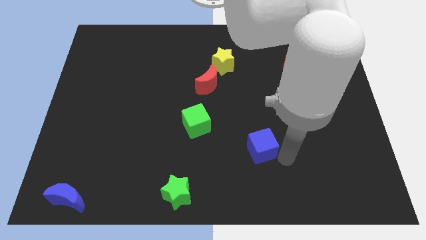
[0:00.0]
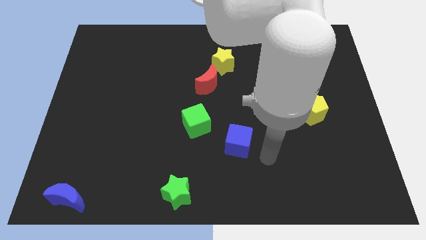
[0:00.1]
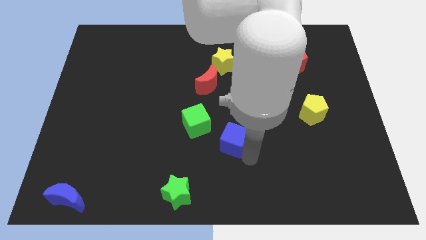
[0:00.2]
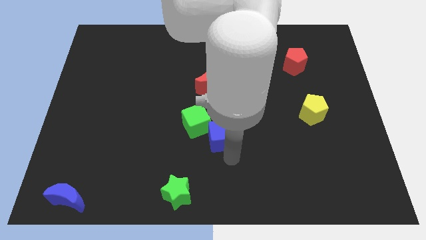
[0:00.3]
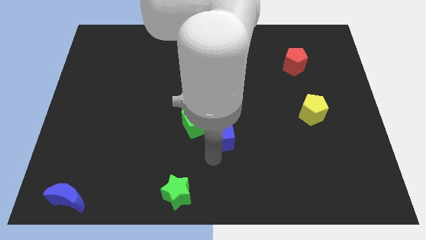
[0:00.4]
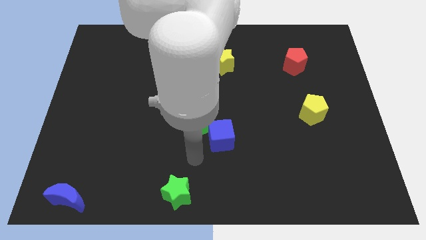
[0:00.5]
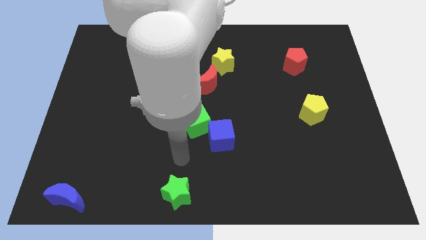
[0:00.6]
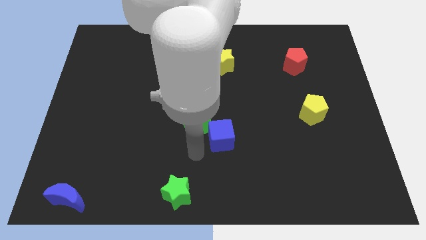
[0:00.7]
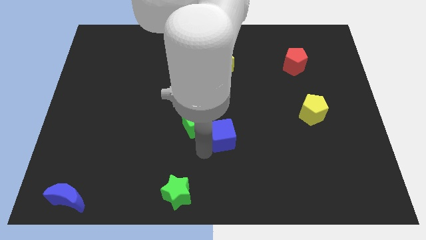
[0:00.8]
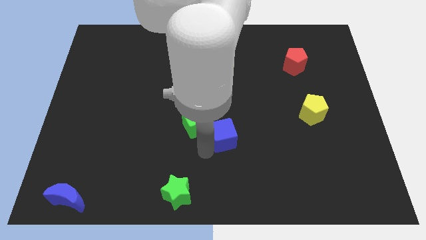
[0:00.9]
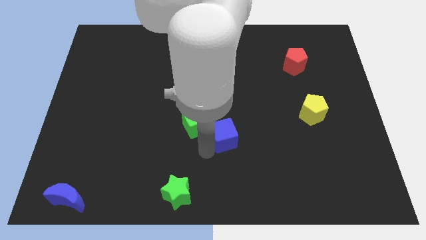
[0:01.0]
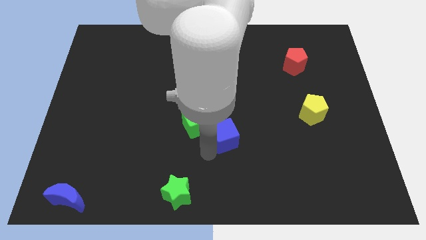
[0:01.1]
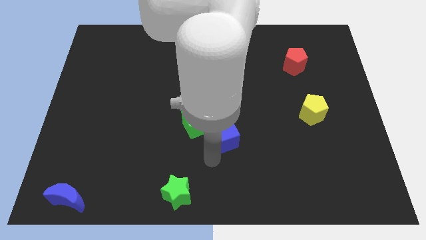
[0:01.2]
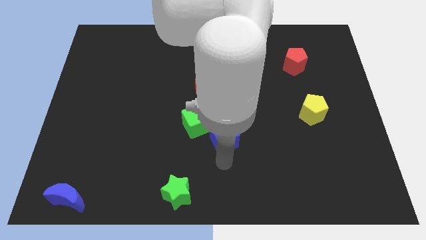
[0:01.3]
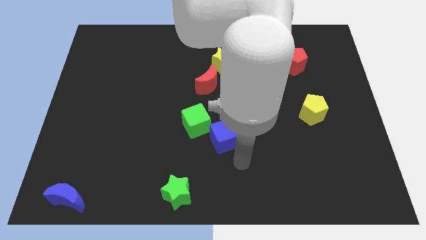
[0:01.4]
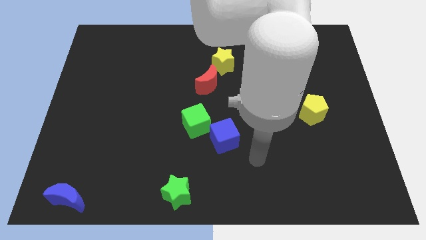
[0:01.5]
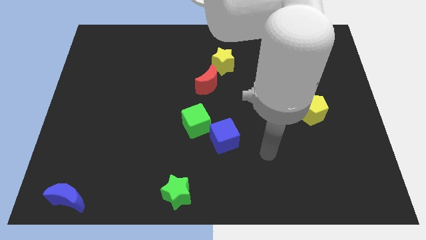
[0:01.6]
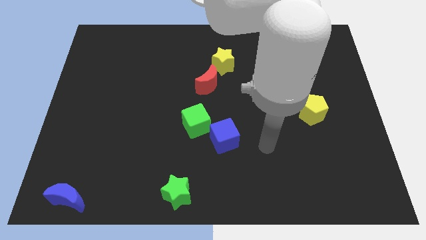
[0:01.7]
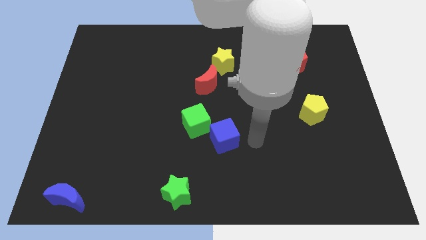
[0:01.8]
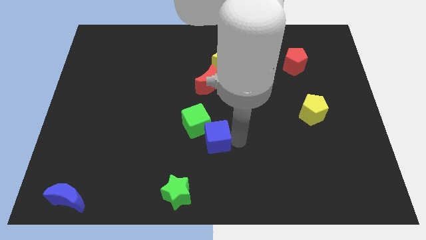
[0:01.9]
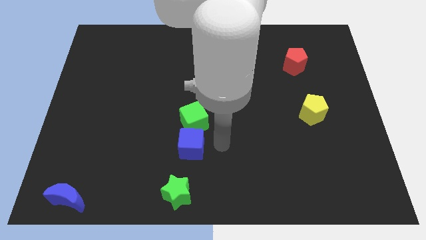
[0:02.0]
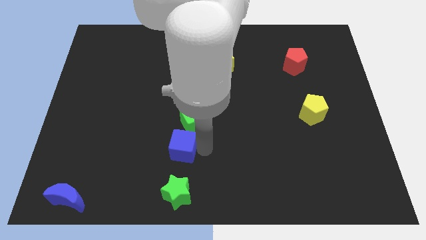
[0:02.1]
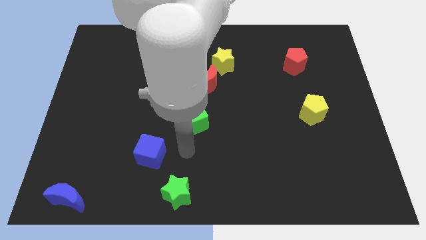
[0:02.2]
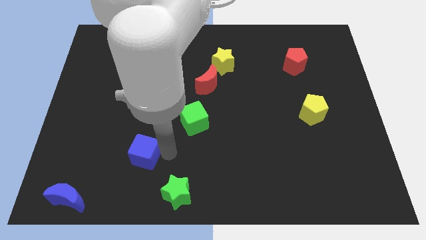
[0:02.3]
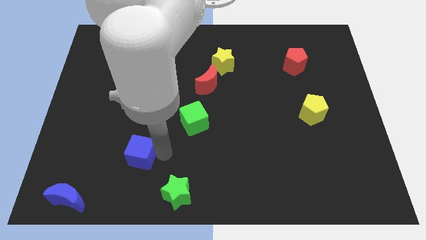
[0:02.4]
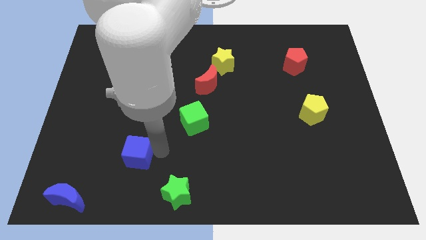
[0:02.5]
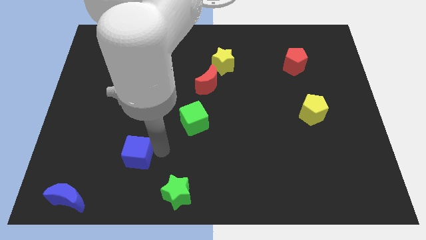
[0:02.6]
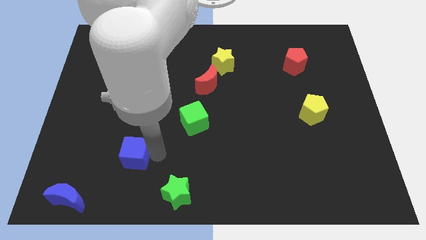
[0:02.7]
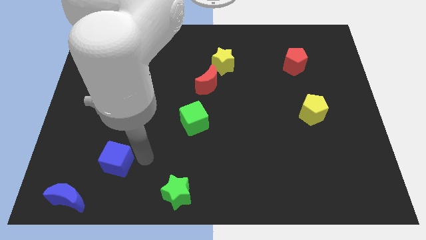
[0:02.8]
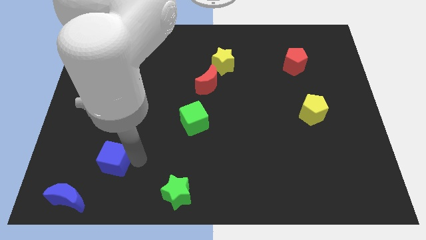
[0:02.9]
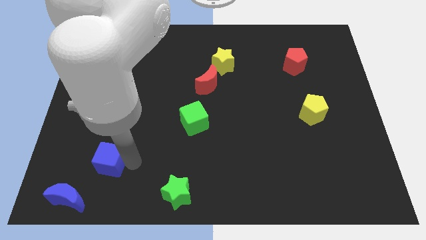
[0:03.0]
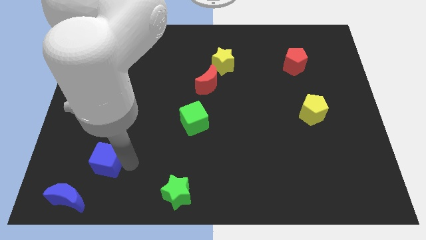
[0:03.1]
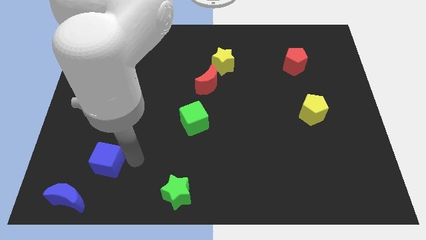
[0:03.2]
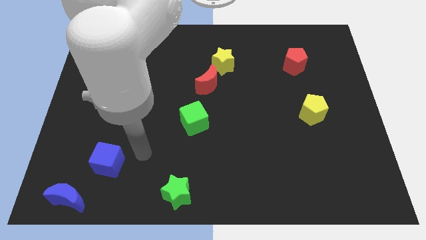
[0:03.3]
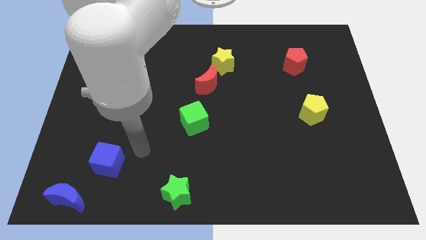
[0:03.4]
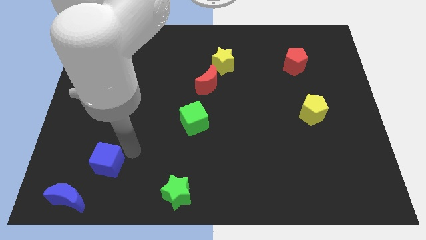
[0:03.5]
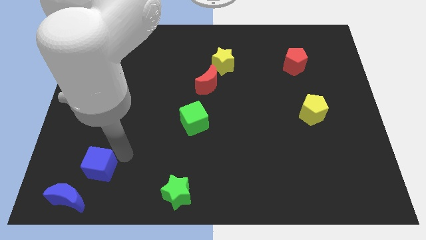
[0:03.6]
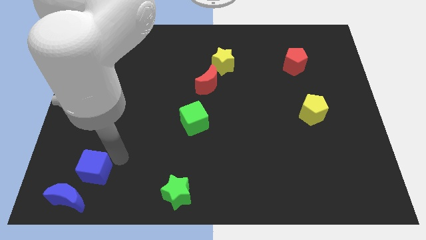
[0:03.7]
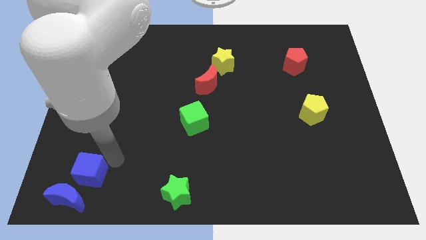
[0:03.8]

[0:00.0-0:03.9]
move the blue cube to the left side of the board

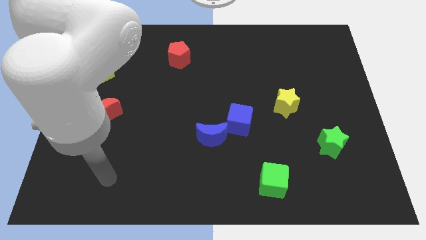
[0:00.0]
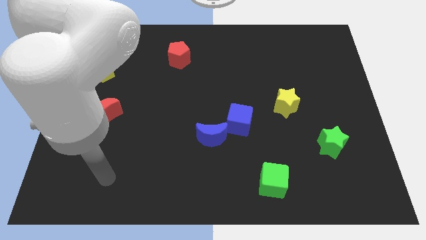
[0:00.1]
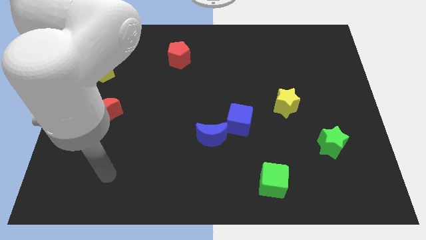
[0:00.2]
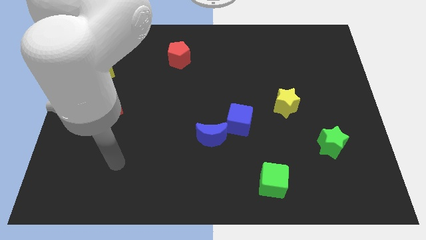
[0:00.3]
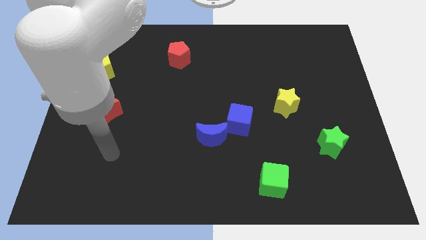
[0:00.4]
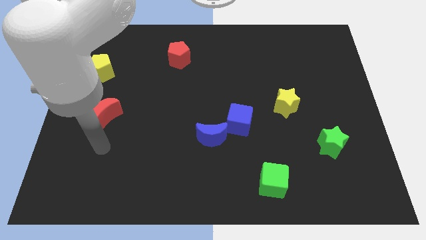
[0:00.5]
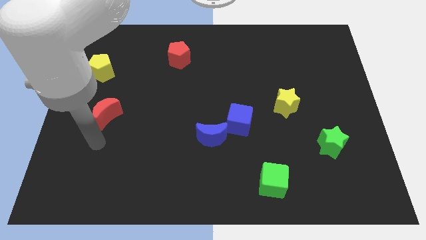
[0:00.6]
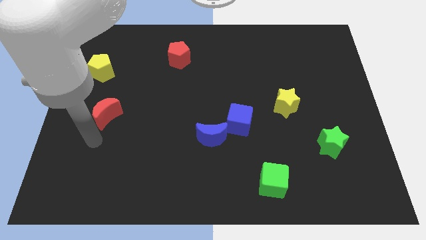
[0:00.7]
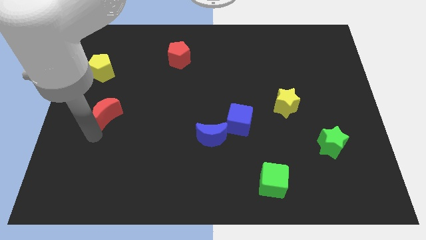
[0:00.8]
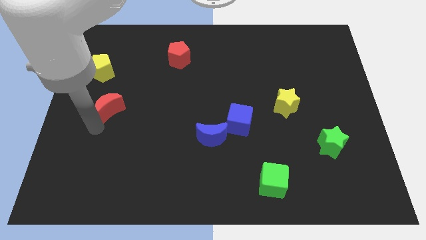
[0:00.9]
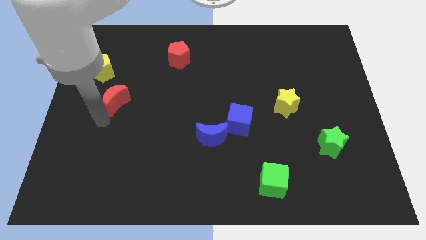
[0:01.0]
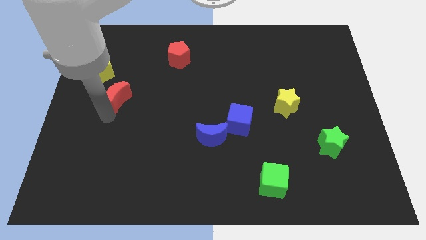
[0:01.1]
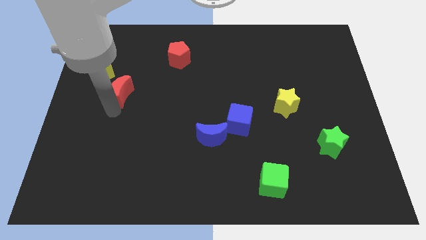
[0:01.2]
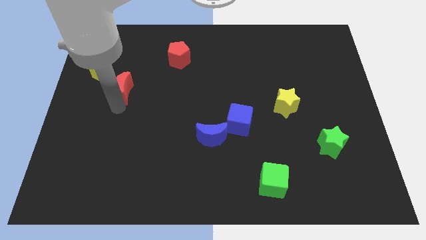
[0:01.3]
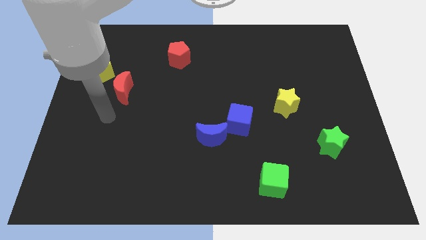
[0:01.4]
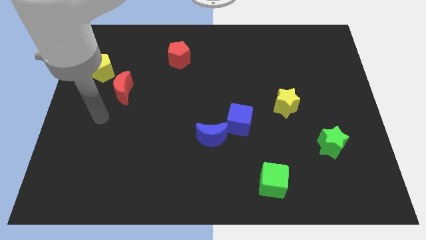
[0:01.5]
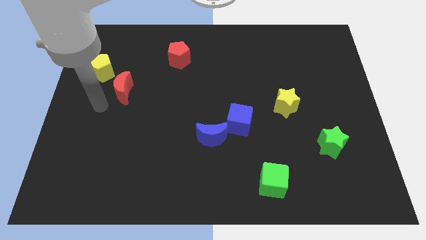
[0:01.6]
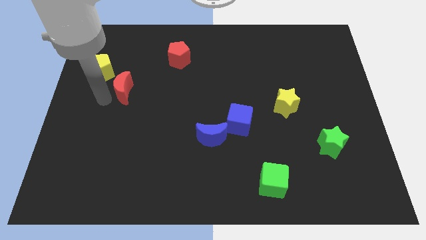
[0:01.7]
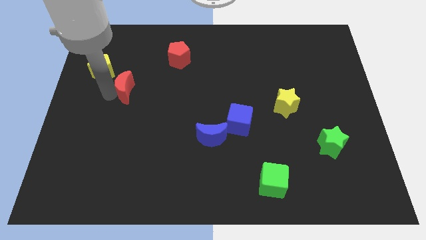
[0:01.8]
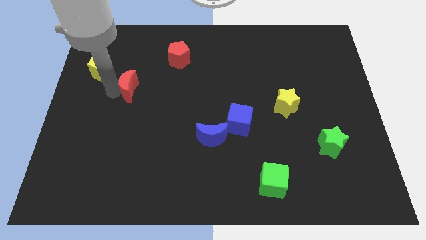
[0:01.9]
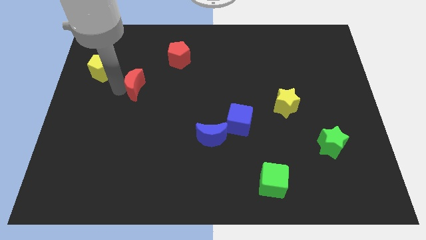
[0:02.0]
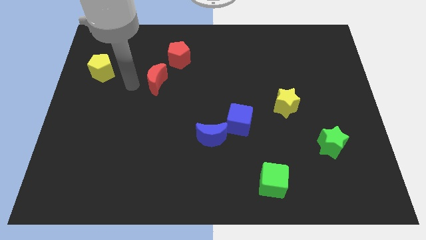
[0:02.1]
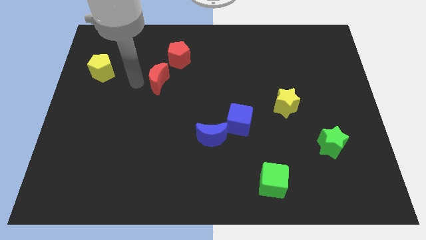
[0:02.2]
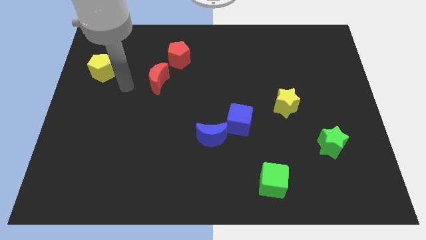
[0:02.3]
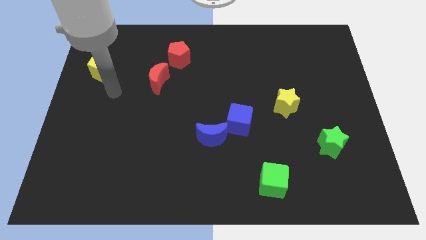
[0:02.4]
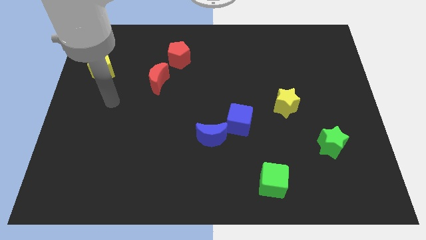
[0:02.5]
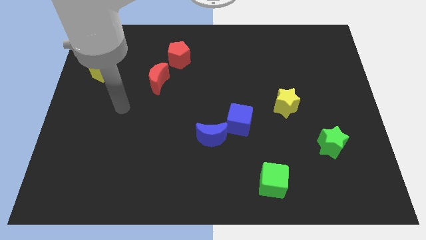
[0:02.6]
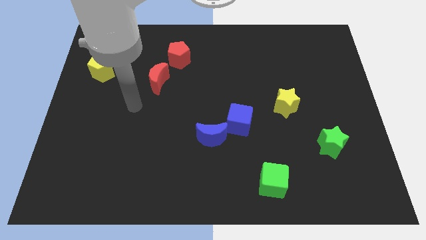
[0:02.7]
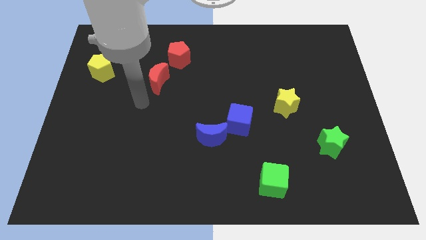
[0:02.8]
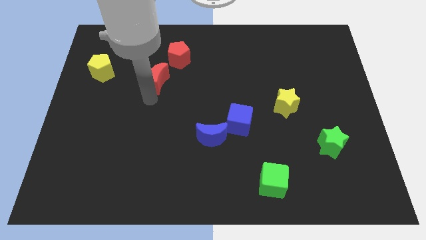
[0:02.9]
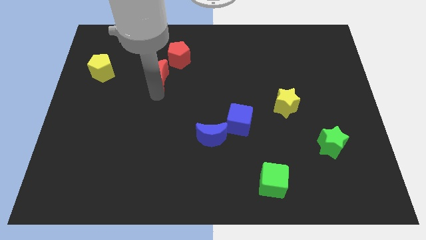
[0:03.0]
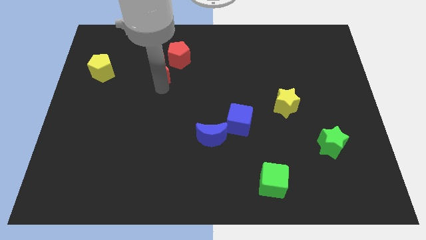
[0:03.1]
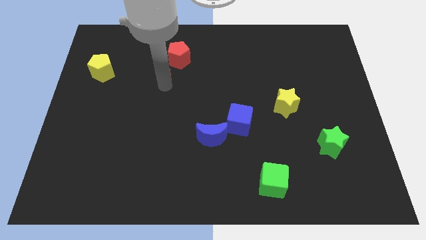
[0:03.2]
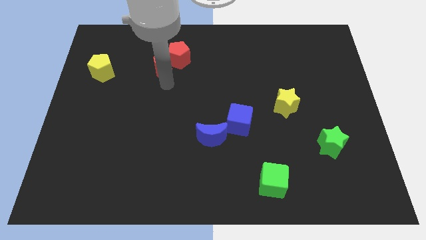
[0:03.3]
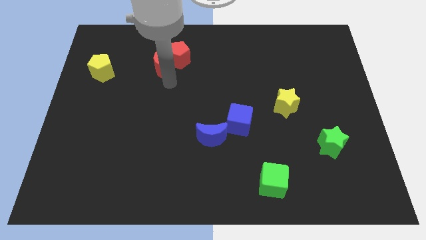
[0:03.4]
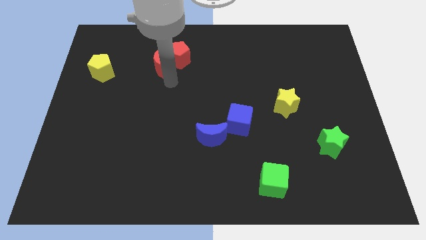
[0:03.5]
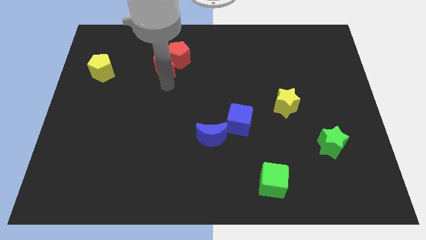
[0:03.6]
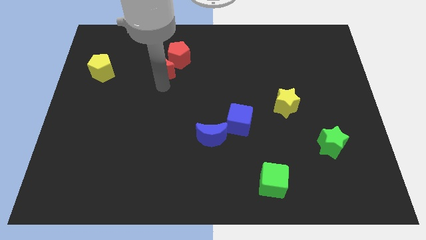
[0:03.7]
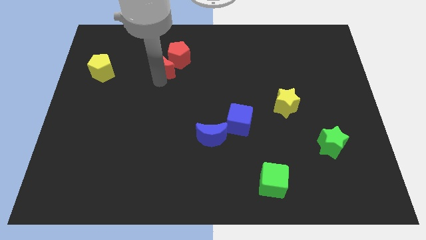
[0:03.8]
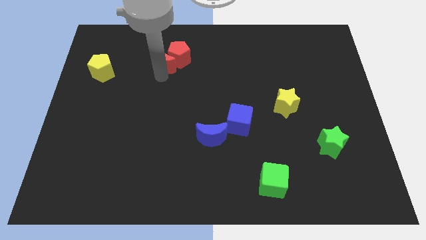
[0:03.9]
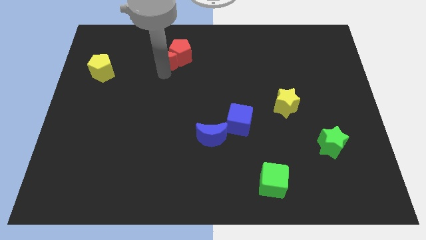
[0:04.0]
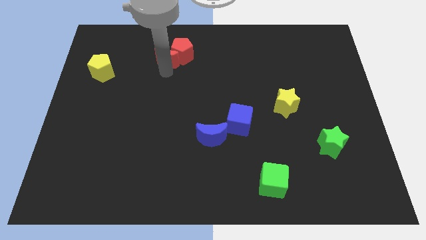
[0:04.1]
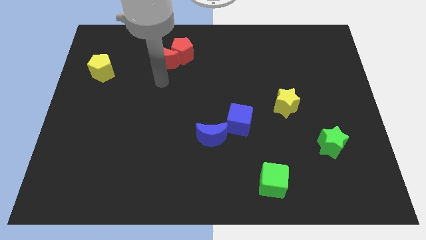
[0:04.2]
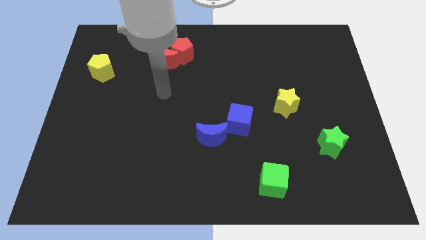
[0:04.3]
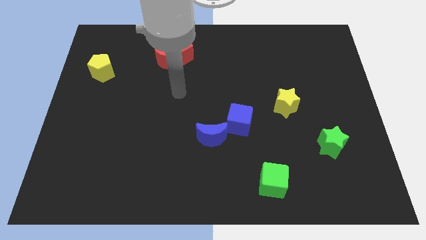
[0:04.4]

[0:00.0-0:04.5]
push the red moon into the red pentagon

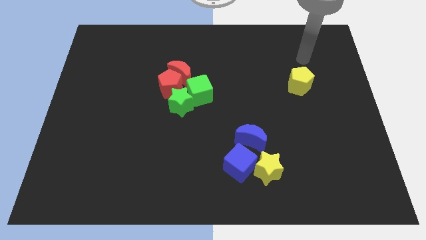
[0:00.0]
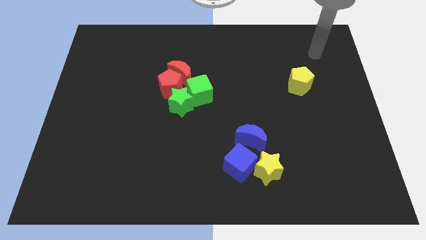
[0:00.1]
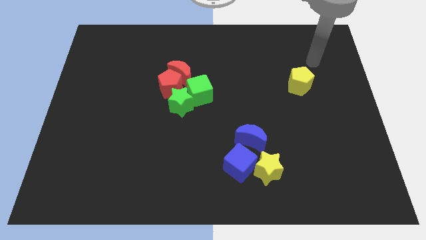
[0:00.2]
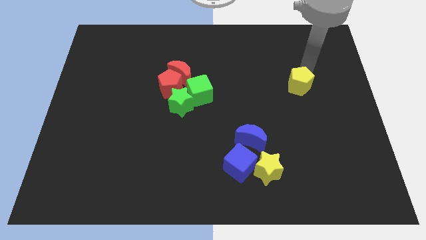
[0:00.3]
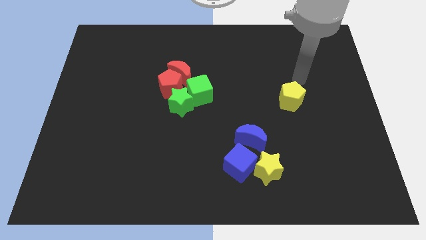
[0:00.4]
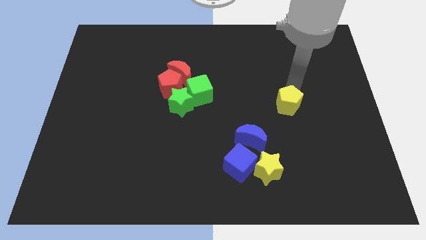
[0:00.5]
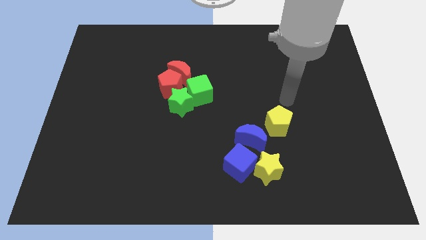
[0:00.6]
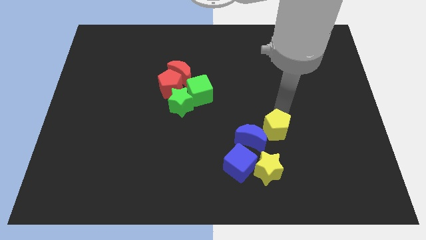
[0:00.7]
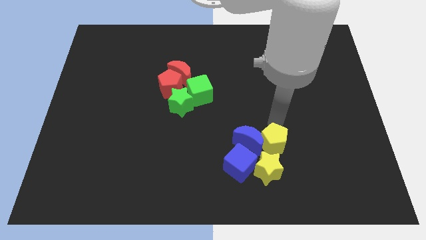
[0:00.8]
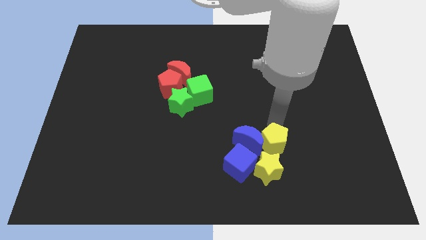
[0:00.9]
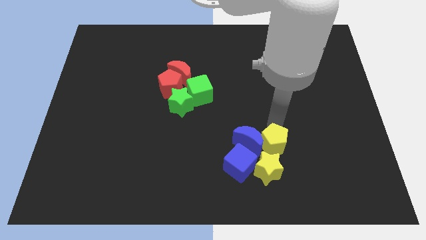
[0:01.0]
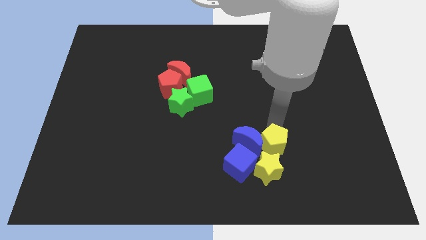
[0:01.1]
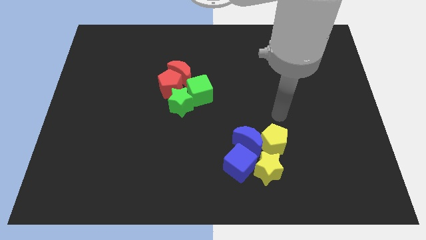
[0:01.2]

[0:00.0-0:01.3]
move the yellow pentagon into the blue crescent
